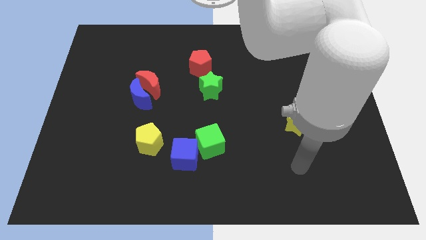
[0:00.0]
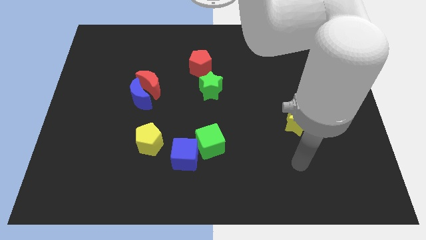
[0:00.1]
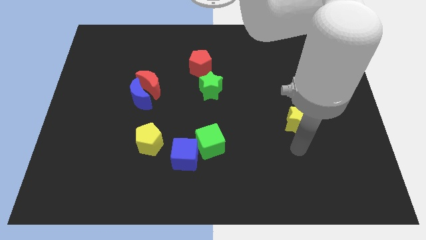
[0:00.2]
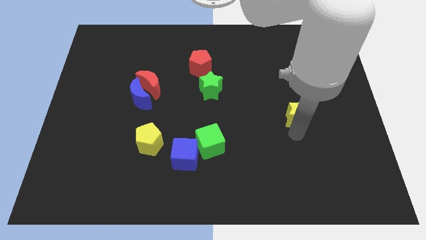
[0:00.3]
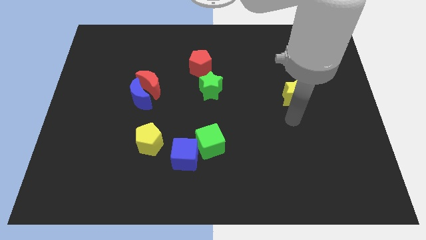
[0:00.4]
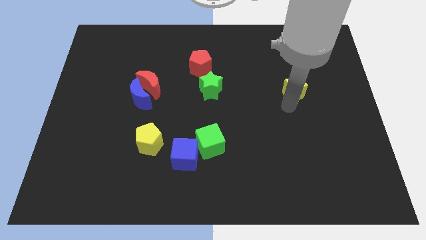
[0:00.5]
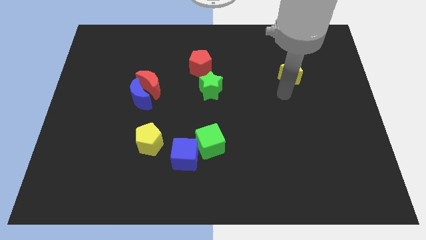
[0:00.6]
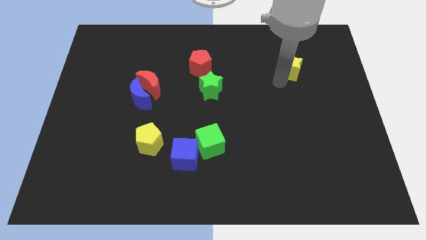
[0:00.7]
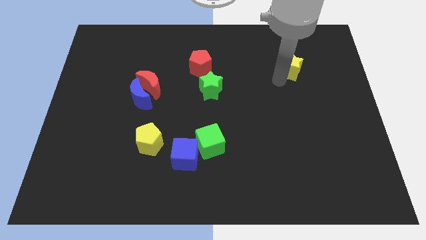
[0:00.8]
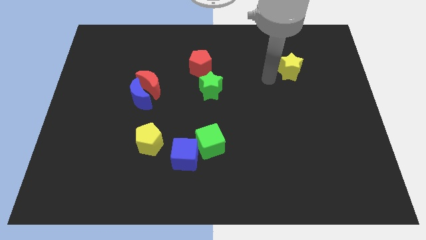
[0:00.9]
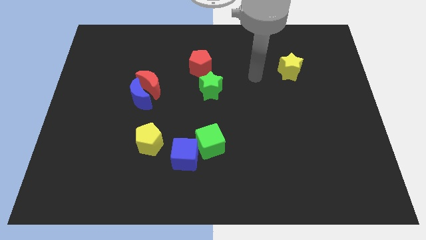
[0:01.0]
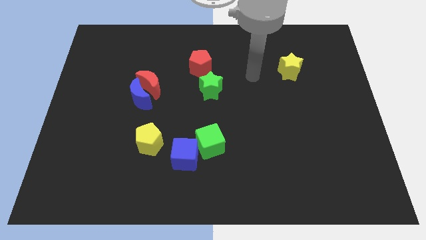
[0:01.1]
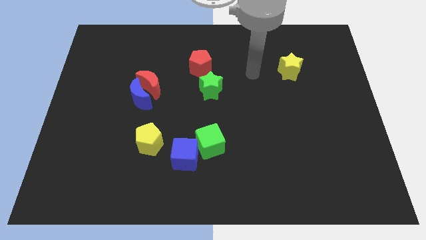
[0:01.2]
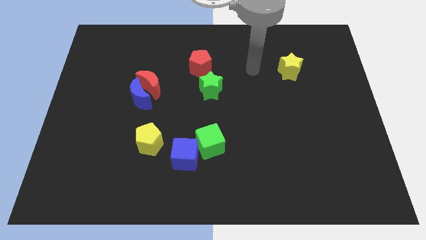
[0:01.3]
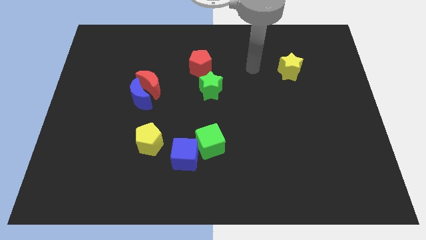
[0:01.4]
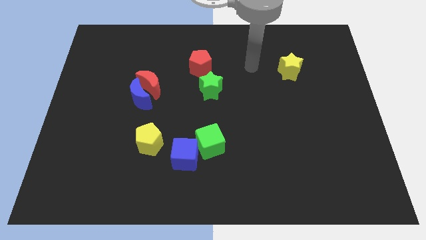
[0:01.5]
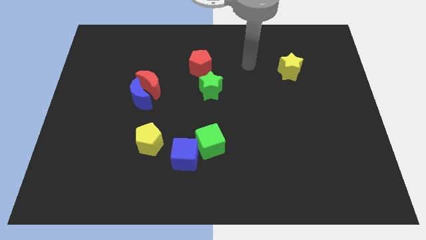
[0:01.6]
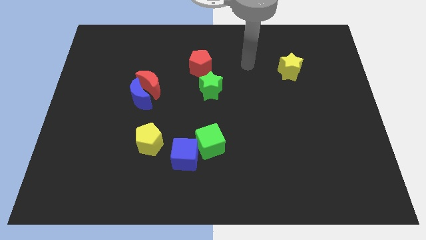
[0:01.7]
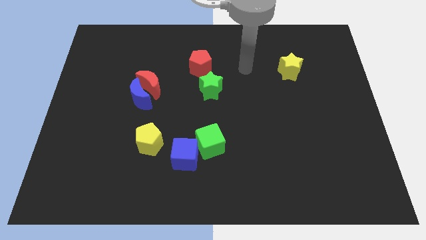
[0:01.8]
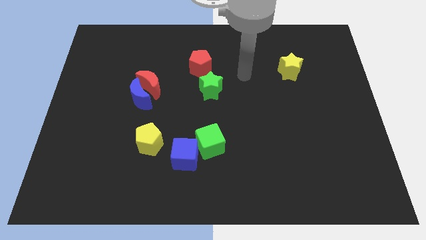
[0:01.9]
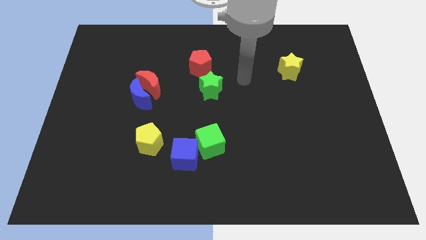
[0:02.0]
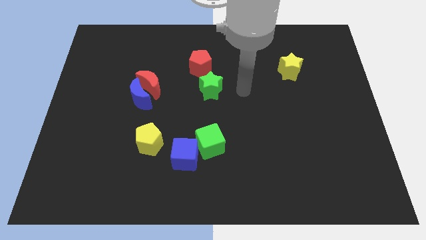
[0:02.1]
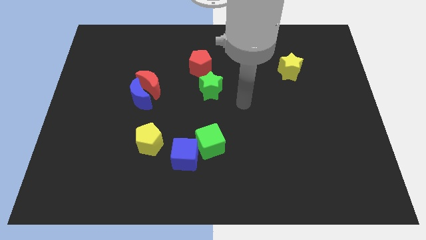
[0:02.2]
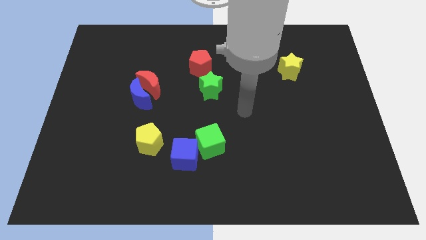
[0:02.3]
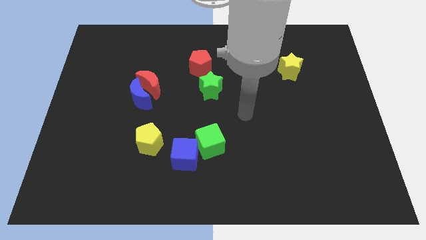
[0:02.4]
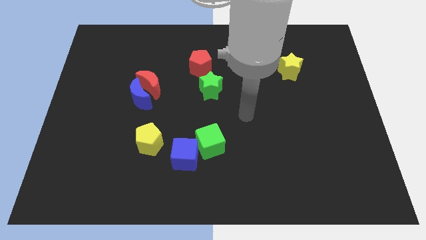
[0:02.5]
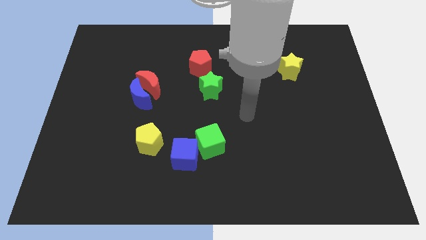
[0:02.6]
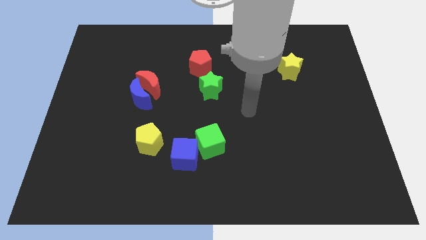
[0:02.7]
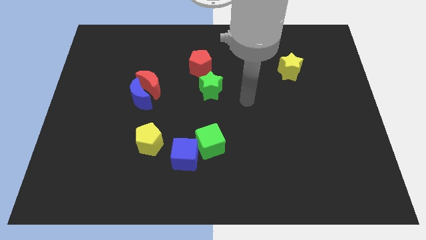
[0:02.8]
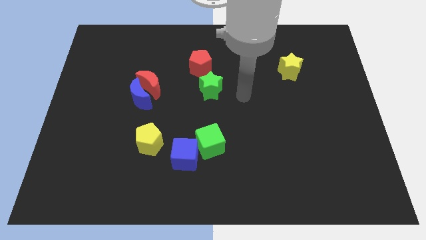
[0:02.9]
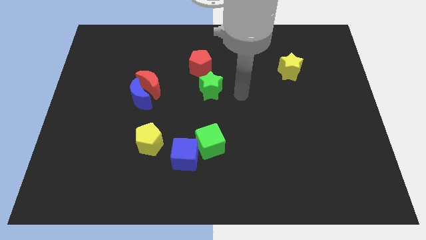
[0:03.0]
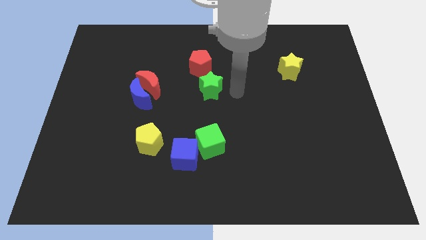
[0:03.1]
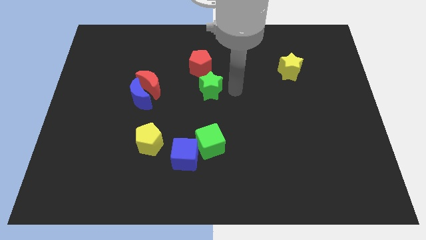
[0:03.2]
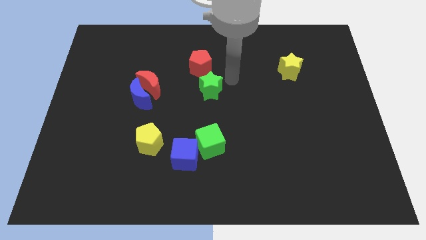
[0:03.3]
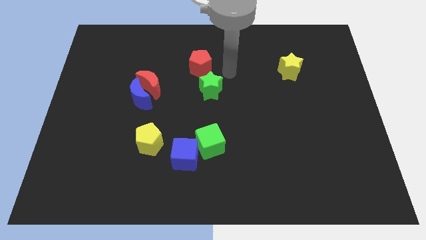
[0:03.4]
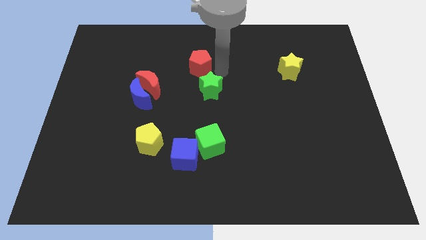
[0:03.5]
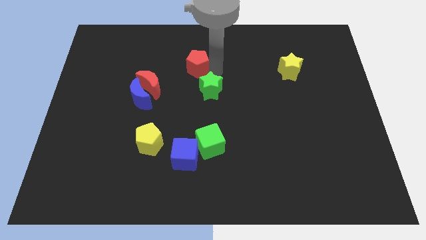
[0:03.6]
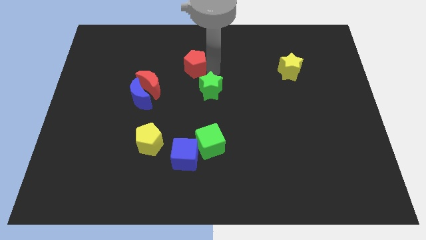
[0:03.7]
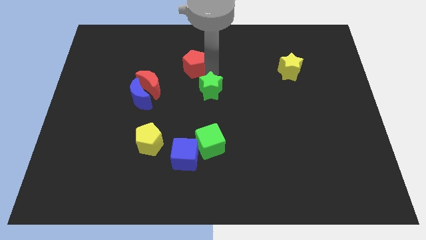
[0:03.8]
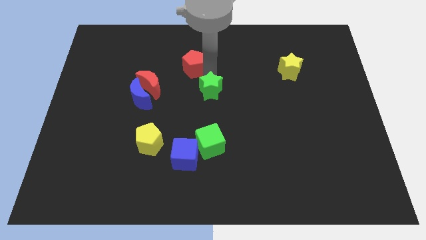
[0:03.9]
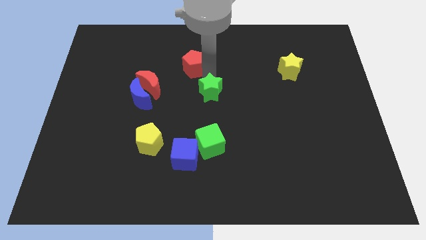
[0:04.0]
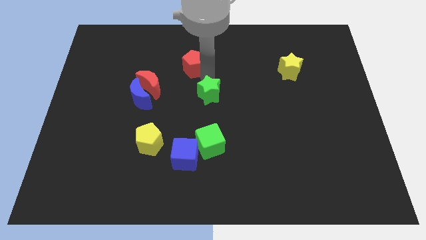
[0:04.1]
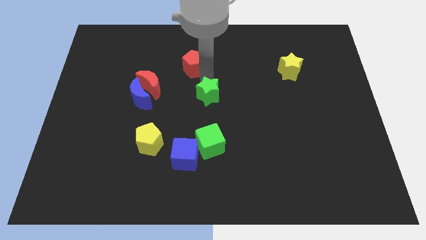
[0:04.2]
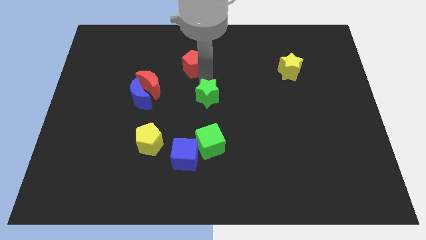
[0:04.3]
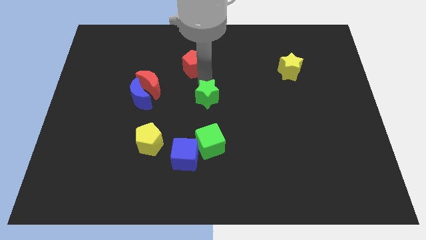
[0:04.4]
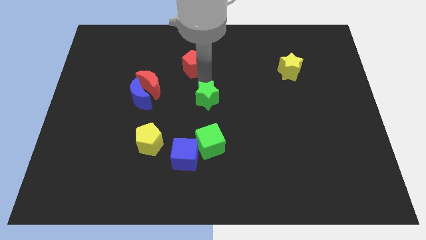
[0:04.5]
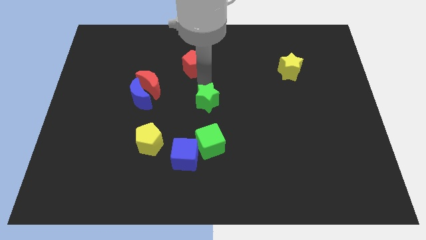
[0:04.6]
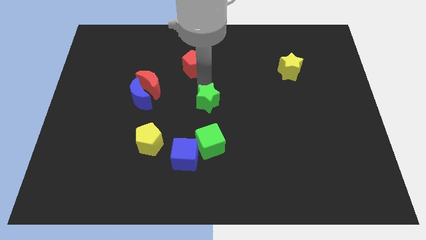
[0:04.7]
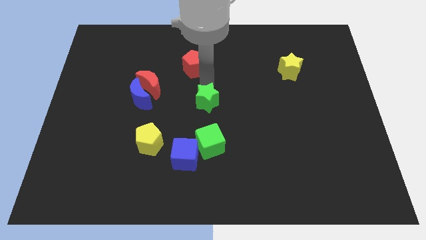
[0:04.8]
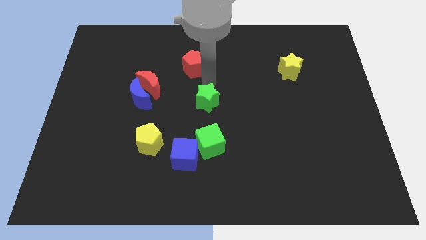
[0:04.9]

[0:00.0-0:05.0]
move the green star in between the red pentagon and the green cube

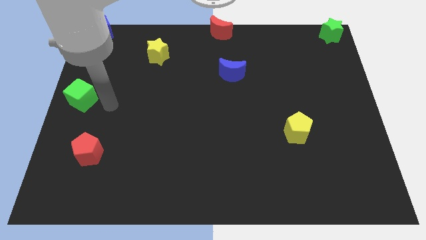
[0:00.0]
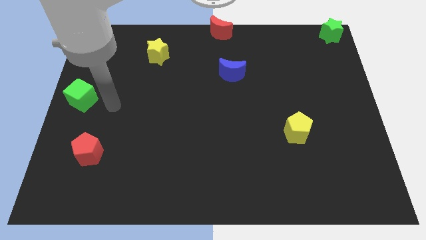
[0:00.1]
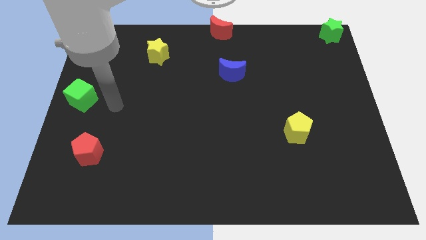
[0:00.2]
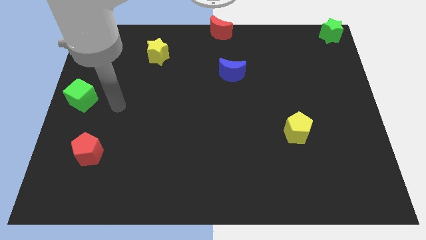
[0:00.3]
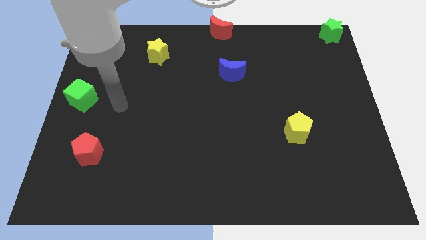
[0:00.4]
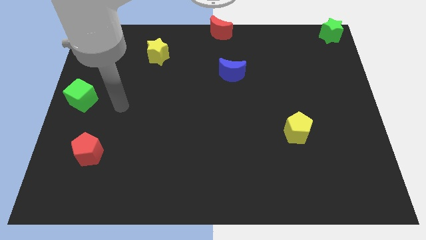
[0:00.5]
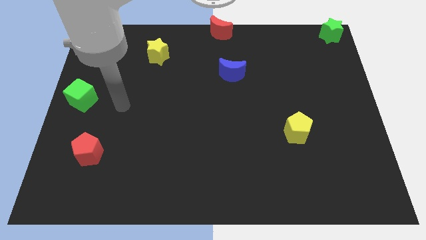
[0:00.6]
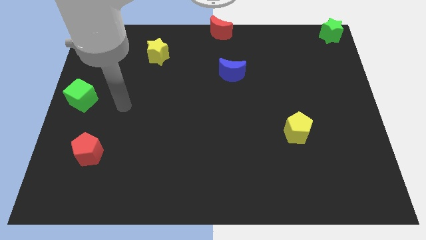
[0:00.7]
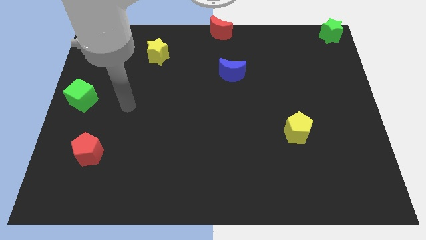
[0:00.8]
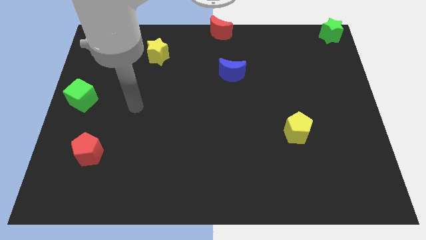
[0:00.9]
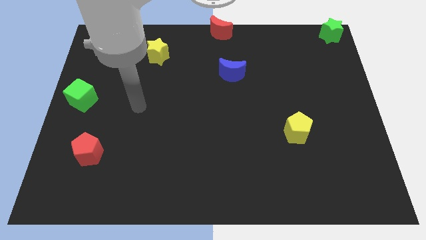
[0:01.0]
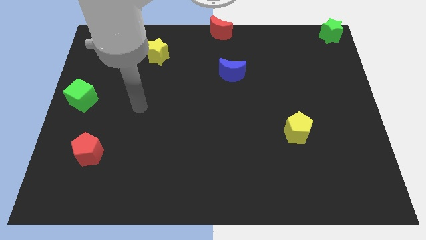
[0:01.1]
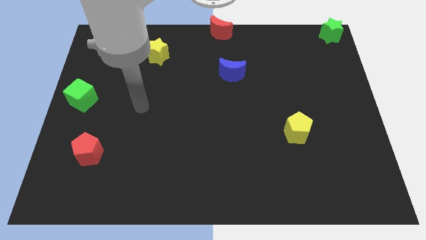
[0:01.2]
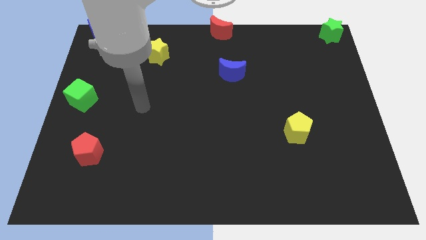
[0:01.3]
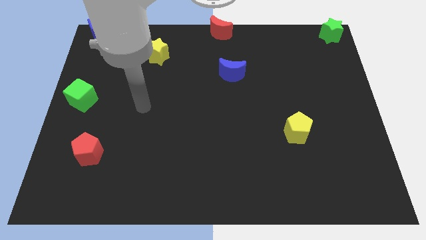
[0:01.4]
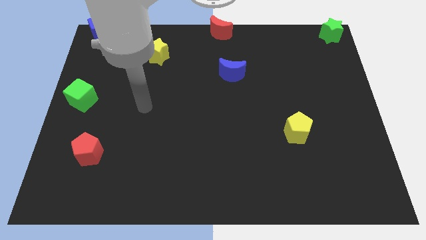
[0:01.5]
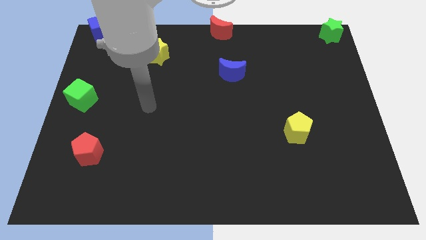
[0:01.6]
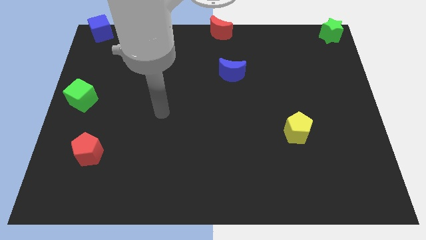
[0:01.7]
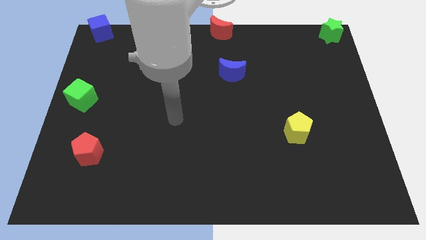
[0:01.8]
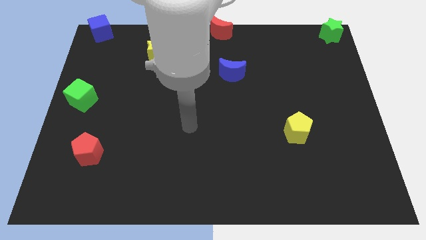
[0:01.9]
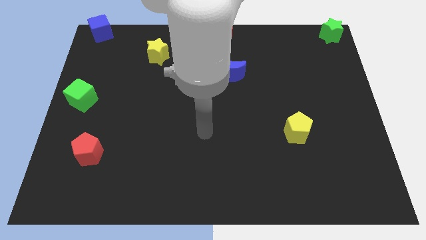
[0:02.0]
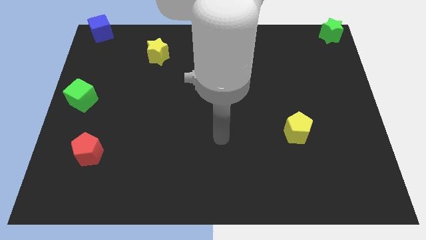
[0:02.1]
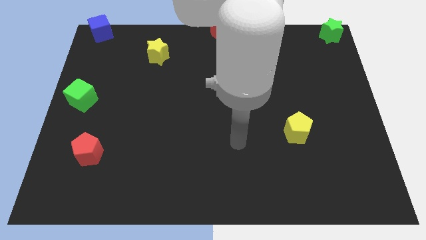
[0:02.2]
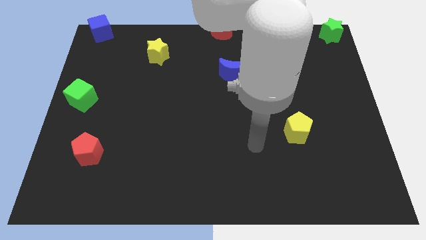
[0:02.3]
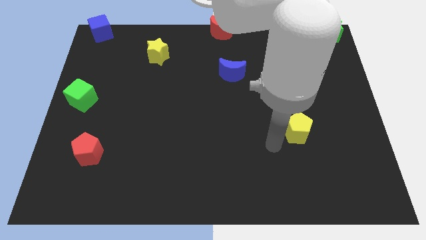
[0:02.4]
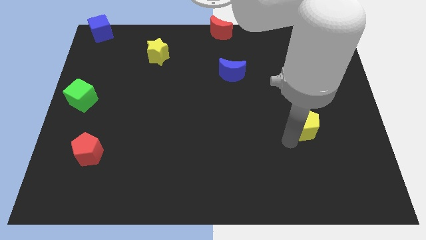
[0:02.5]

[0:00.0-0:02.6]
move your arm towards the left of the yellow pentagon

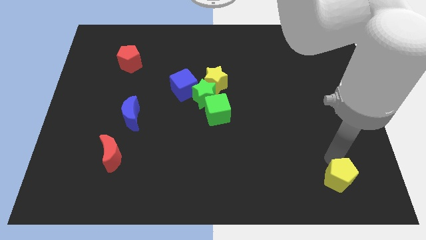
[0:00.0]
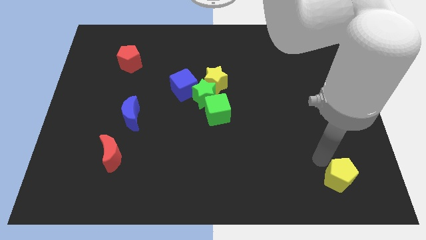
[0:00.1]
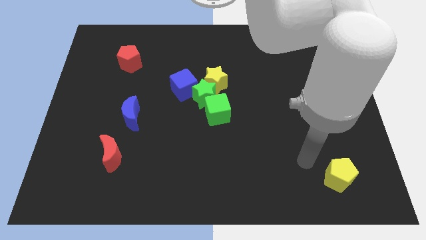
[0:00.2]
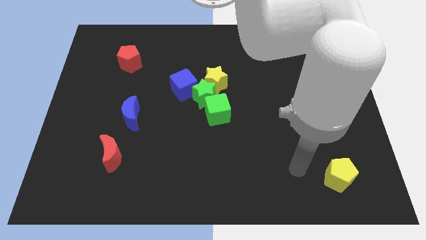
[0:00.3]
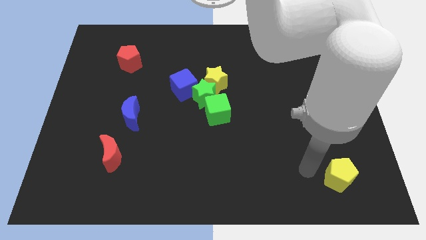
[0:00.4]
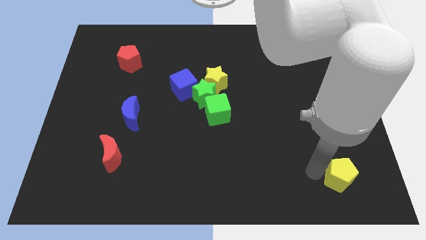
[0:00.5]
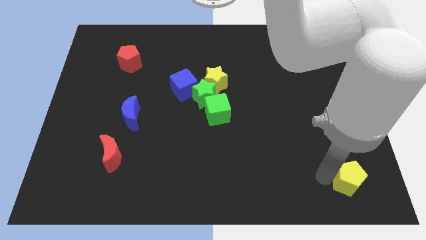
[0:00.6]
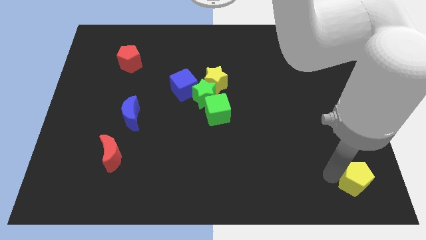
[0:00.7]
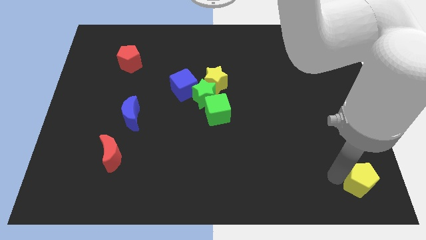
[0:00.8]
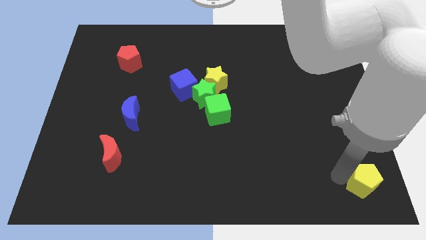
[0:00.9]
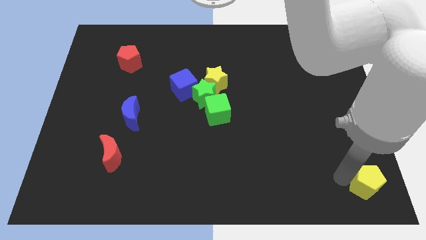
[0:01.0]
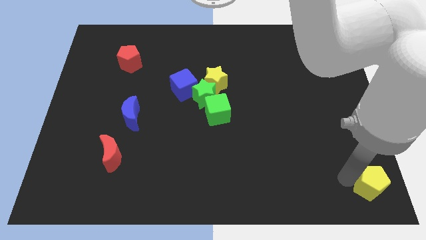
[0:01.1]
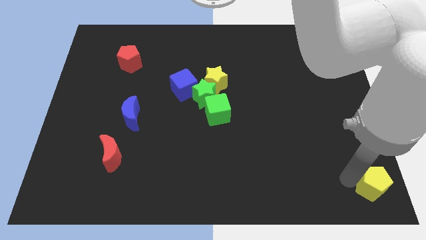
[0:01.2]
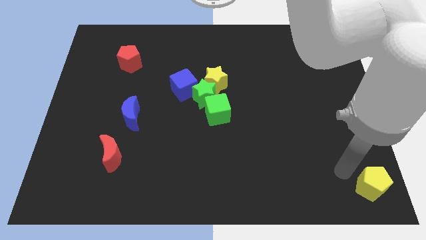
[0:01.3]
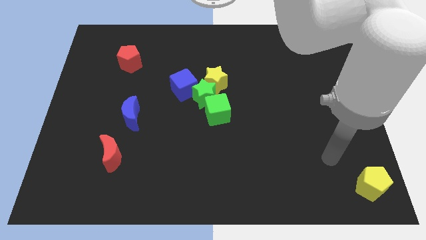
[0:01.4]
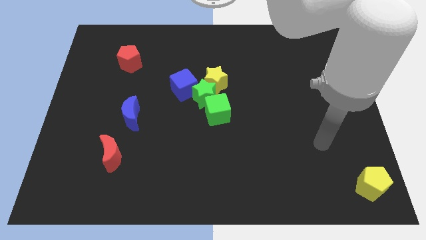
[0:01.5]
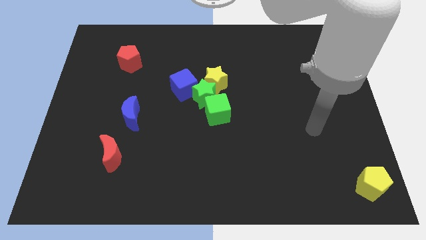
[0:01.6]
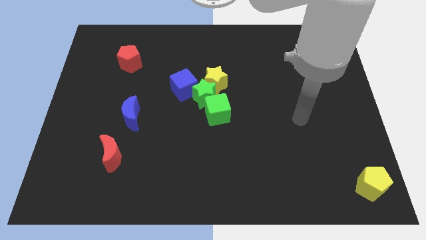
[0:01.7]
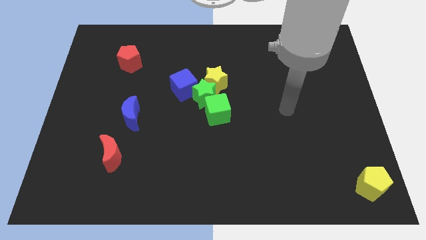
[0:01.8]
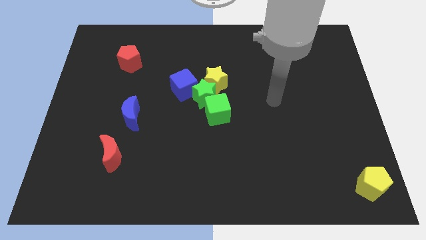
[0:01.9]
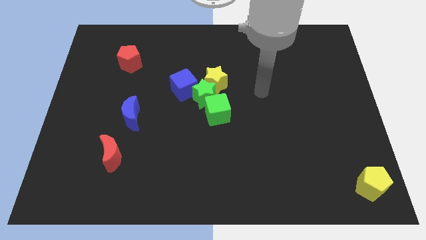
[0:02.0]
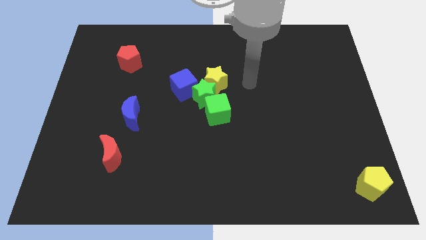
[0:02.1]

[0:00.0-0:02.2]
place the yellow pentagon at the bottom right corner of the board
